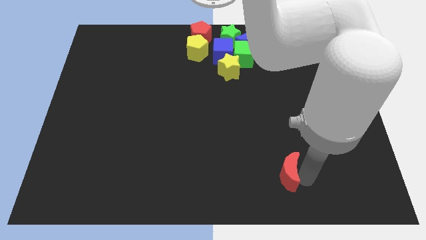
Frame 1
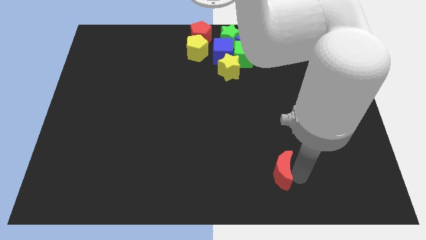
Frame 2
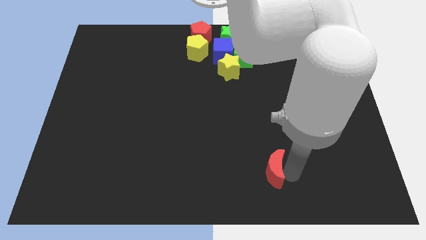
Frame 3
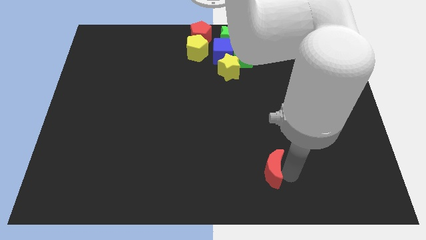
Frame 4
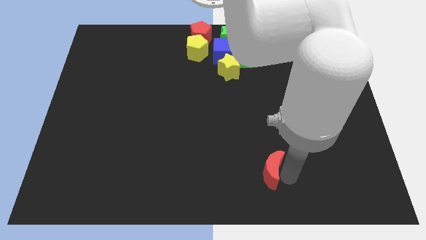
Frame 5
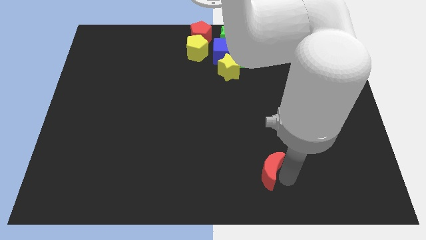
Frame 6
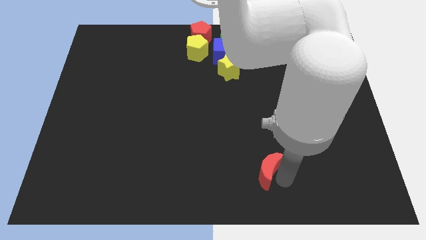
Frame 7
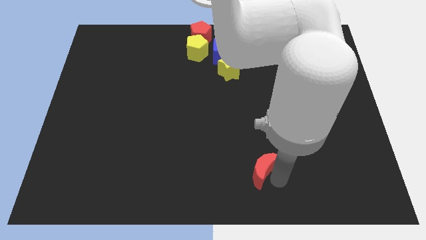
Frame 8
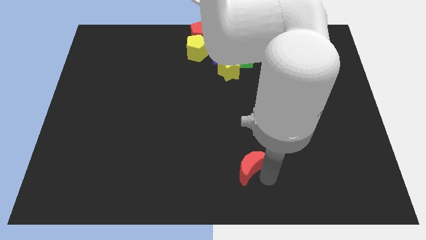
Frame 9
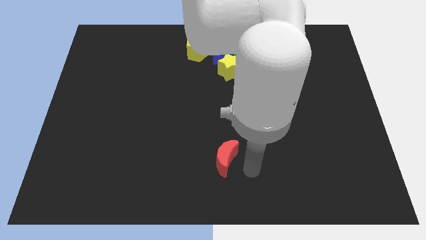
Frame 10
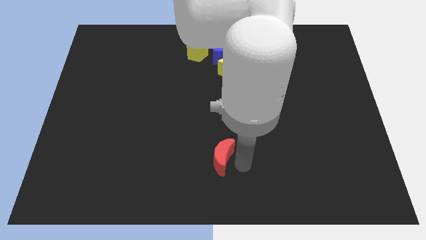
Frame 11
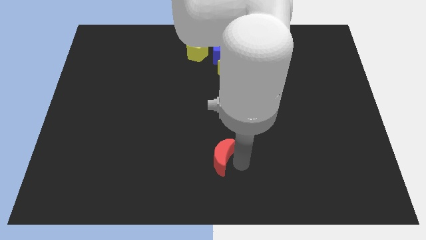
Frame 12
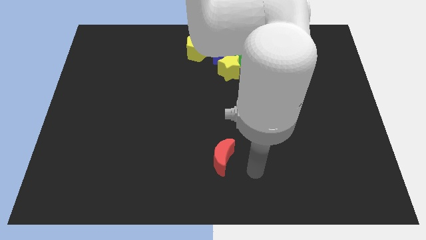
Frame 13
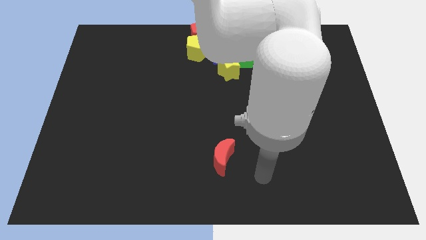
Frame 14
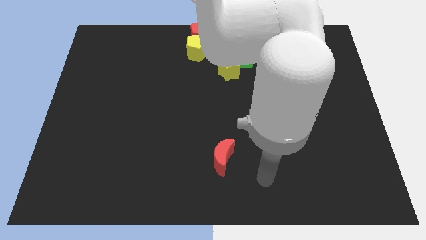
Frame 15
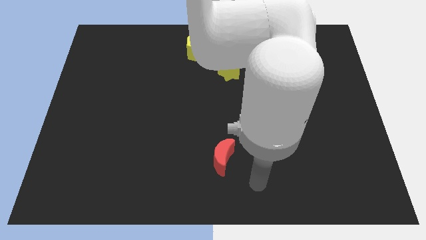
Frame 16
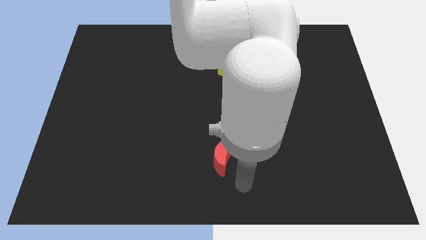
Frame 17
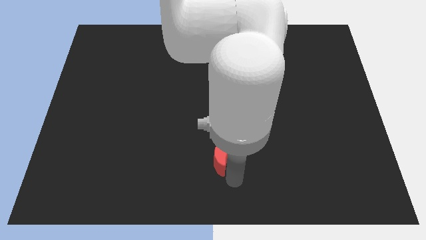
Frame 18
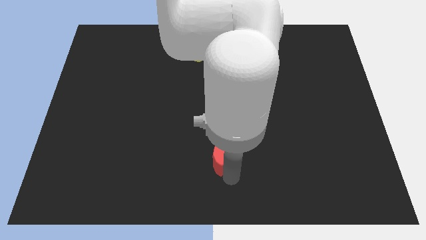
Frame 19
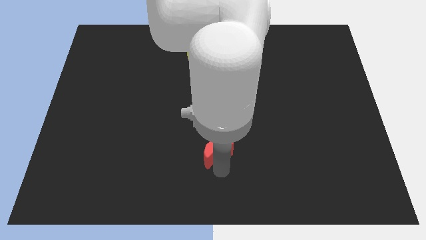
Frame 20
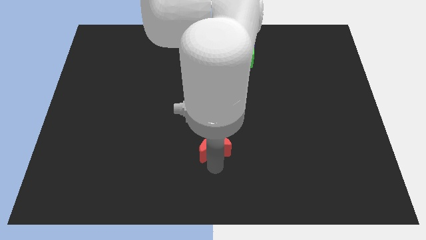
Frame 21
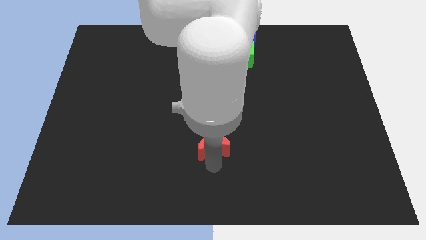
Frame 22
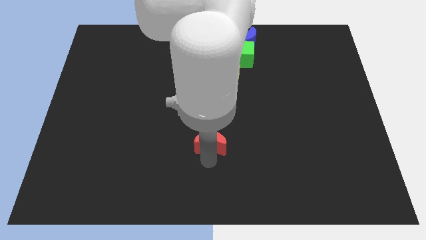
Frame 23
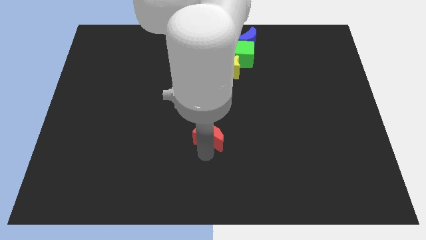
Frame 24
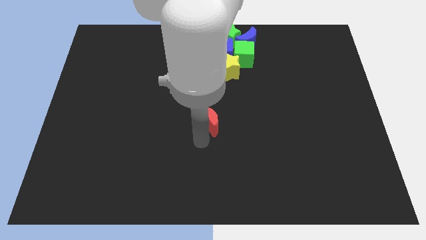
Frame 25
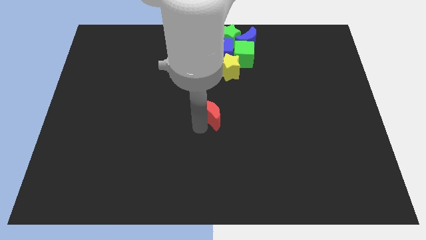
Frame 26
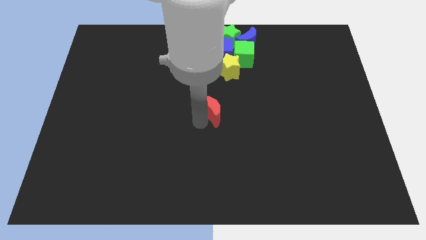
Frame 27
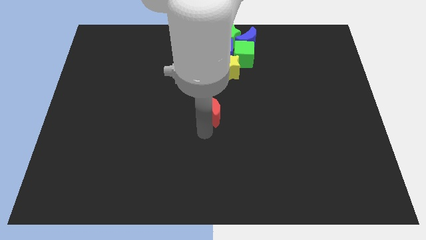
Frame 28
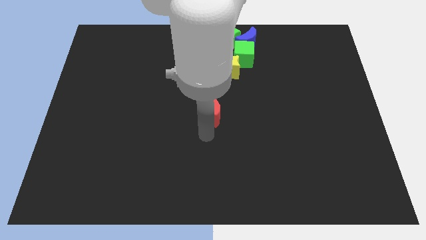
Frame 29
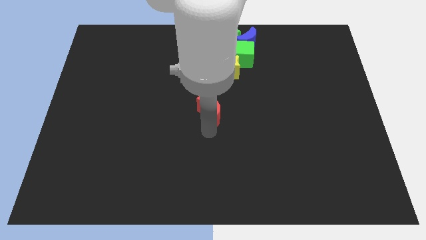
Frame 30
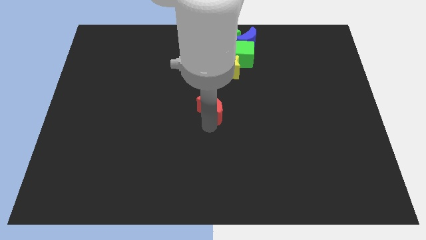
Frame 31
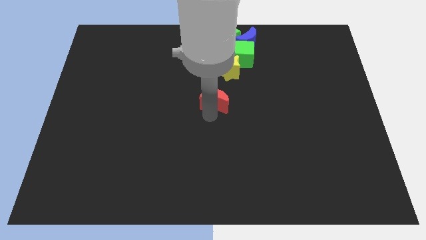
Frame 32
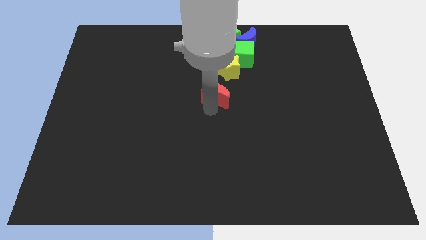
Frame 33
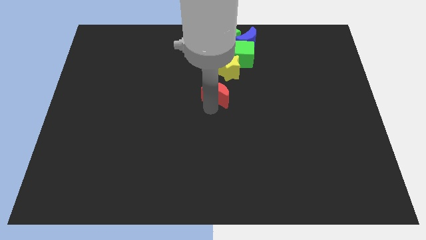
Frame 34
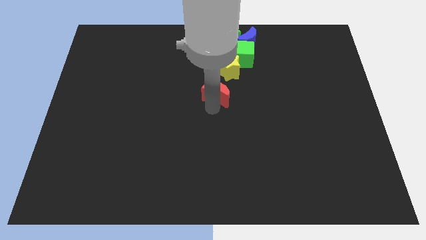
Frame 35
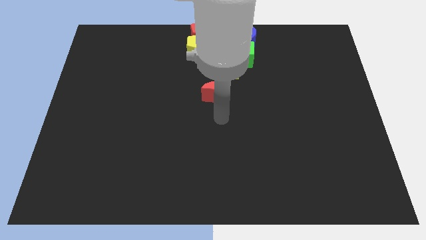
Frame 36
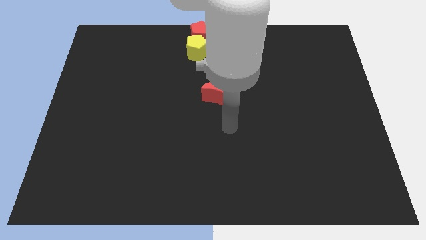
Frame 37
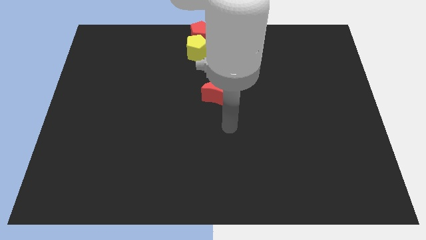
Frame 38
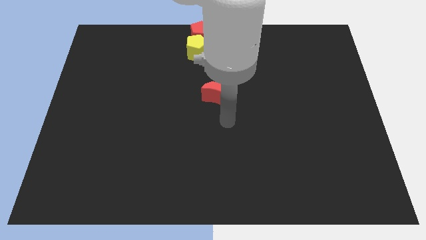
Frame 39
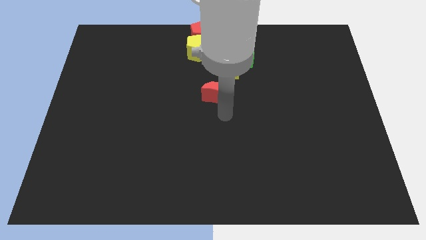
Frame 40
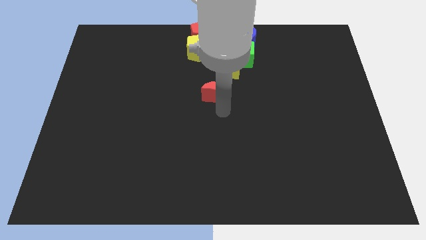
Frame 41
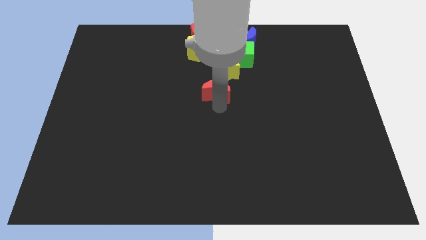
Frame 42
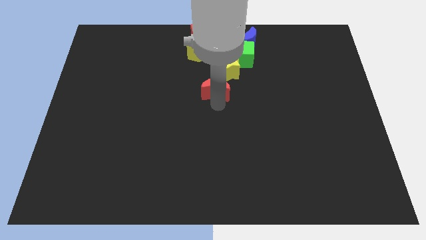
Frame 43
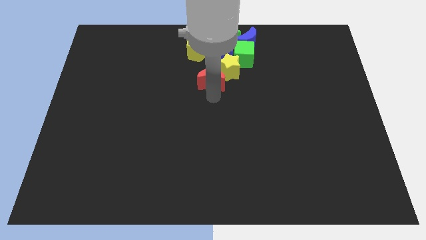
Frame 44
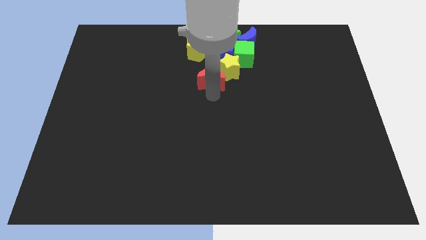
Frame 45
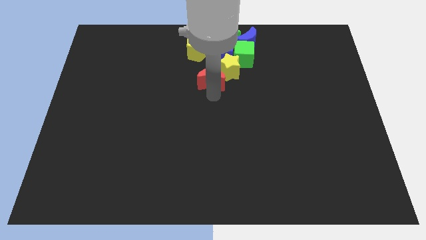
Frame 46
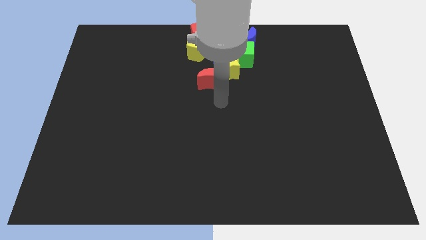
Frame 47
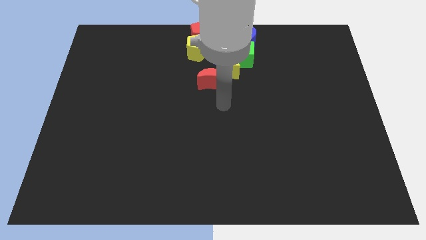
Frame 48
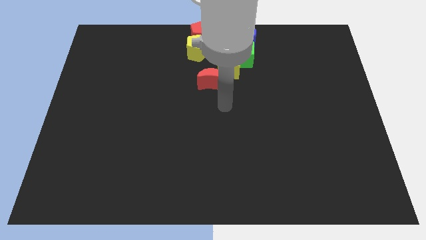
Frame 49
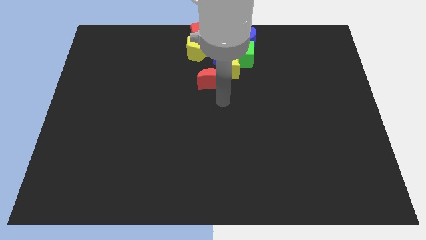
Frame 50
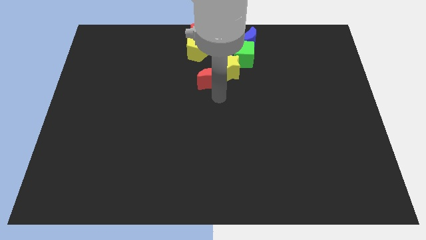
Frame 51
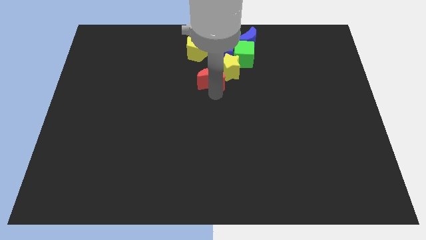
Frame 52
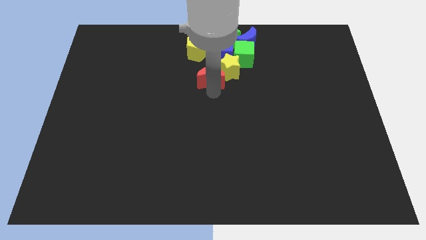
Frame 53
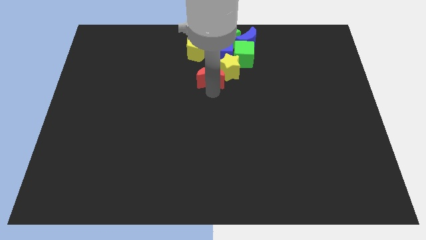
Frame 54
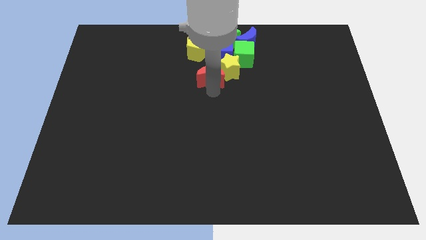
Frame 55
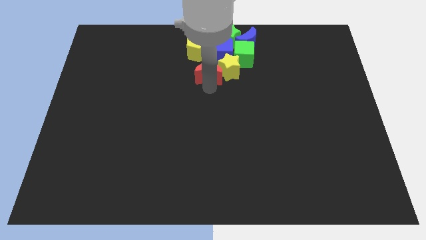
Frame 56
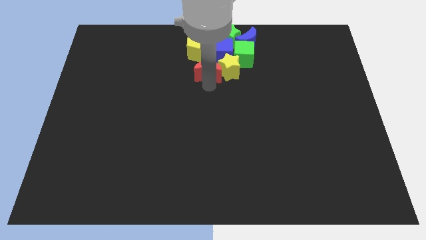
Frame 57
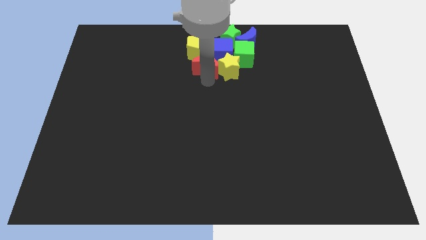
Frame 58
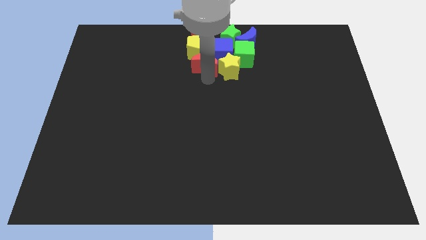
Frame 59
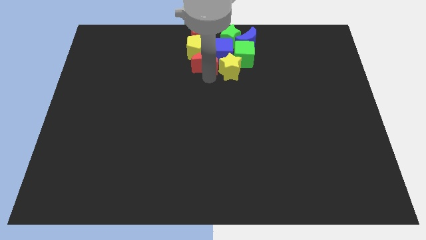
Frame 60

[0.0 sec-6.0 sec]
add the red crescent to the group of all the blocks

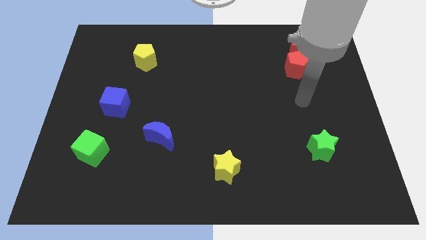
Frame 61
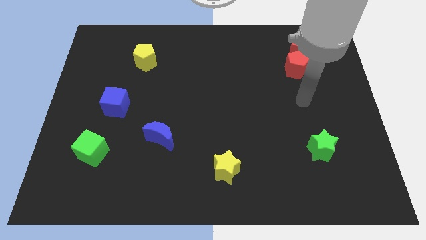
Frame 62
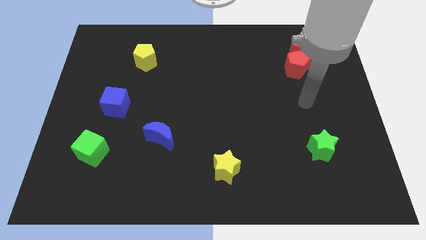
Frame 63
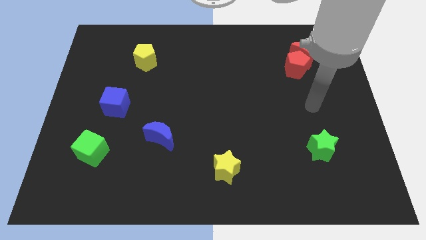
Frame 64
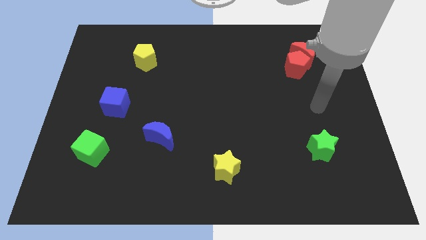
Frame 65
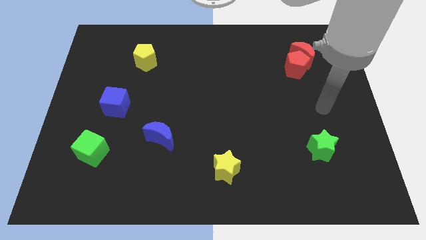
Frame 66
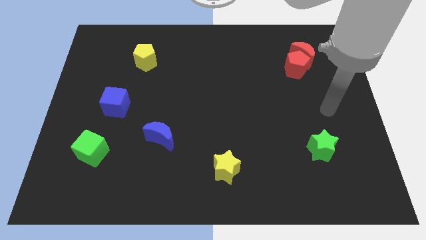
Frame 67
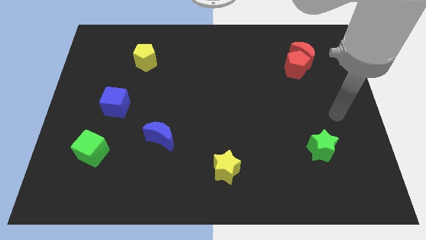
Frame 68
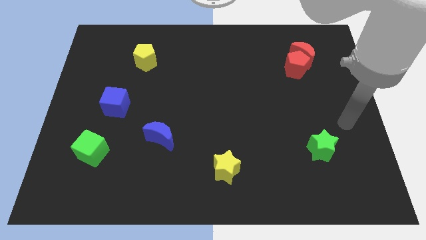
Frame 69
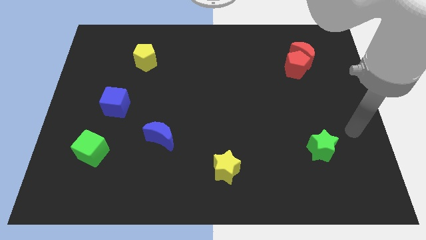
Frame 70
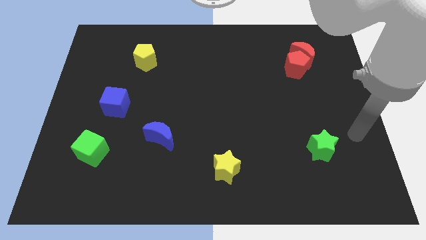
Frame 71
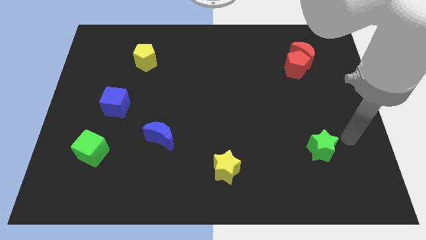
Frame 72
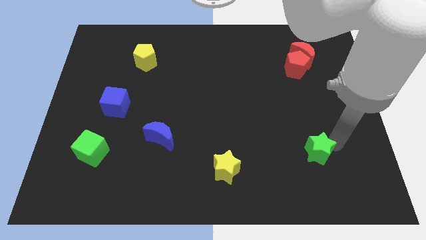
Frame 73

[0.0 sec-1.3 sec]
move arm close to green star

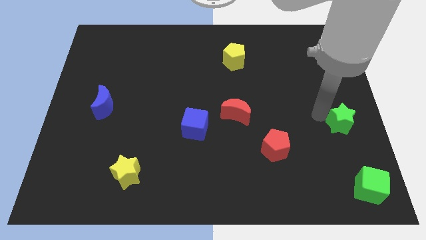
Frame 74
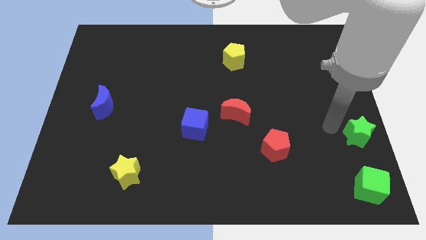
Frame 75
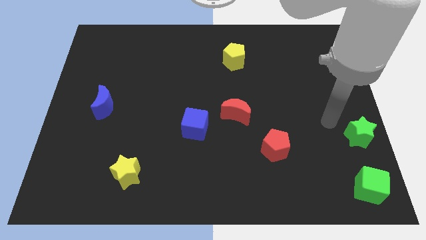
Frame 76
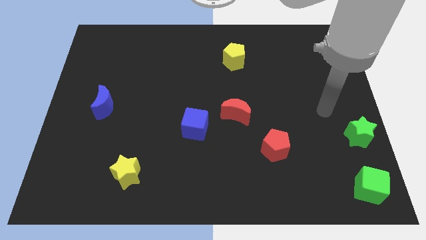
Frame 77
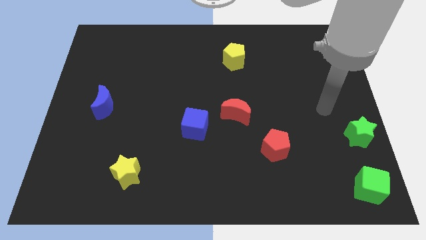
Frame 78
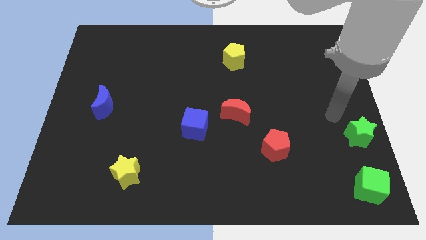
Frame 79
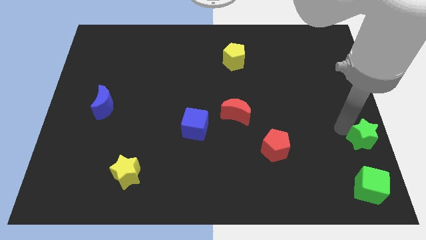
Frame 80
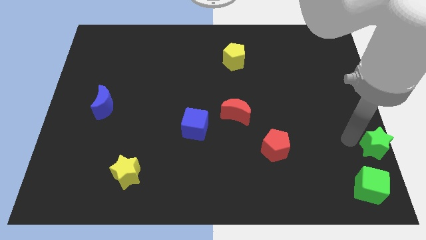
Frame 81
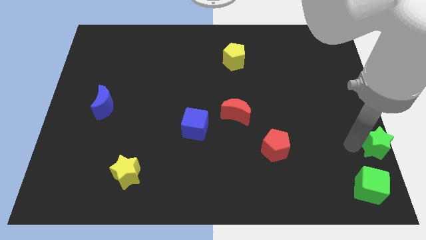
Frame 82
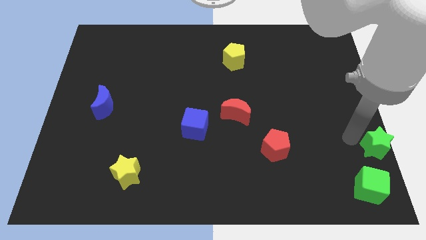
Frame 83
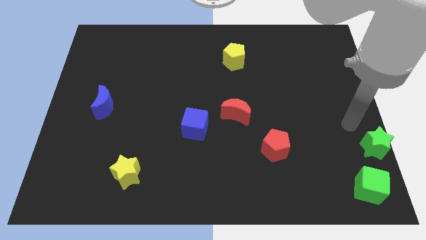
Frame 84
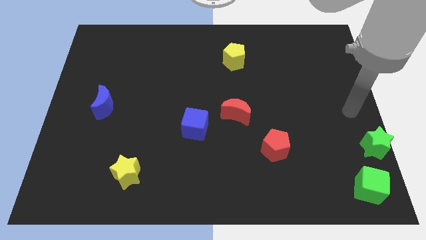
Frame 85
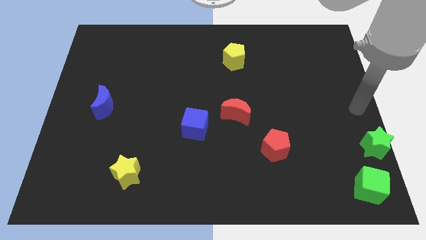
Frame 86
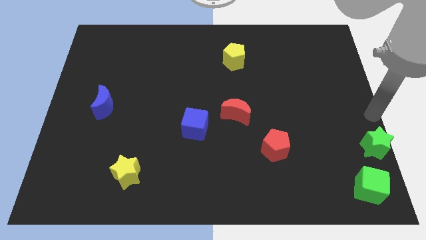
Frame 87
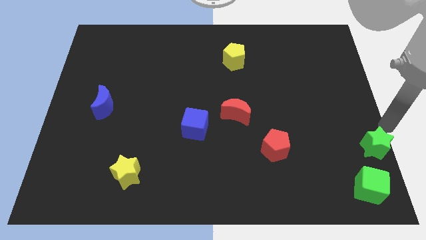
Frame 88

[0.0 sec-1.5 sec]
move green star bottom right corner of the board

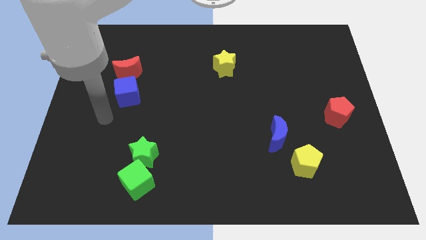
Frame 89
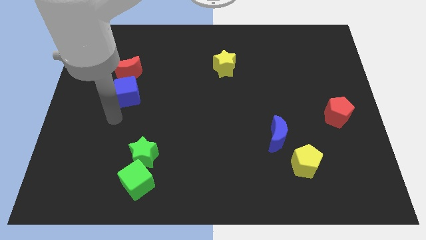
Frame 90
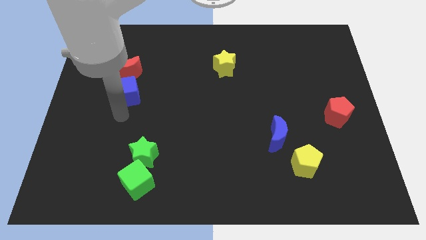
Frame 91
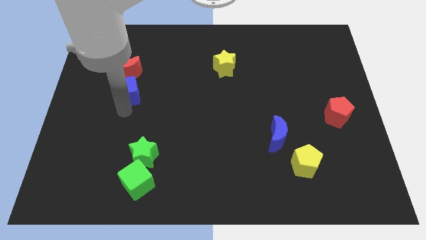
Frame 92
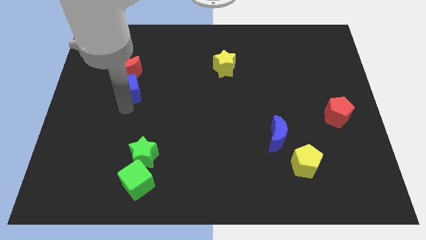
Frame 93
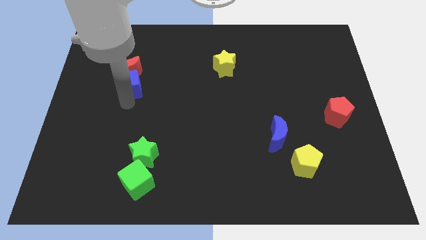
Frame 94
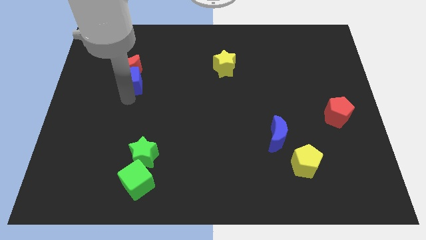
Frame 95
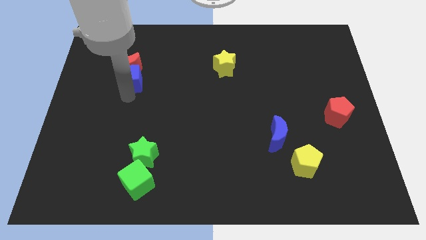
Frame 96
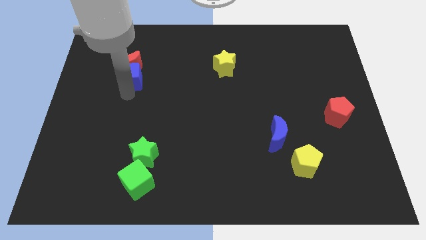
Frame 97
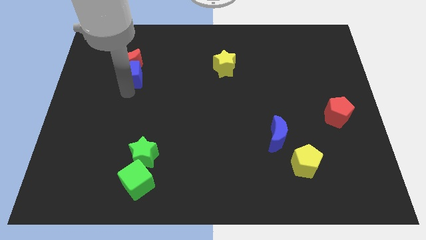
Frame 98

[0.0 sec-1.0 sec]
push blue cube into the red crescent
